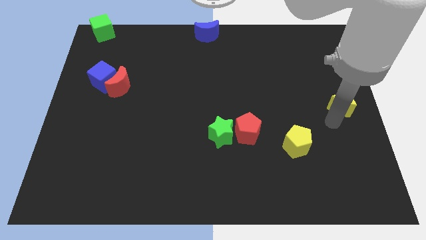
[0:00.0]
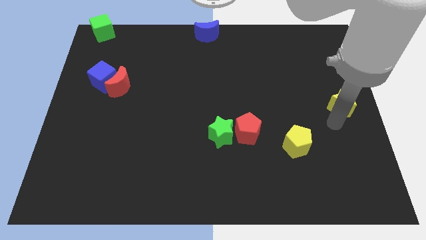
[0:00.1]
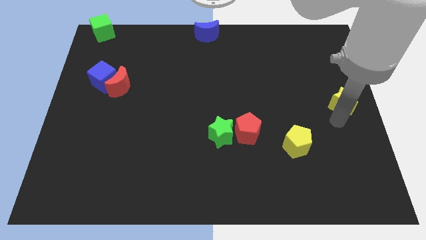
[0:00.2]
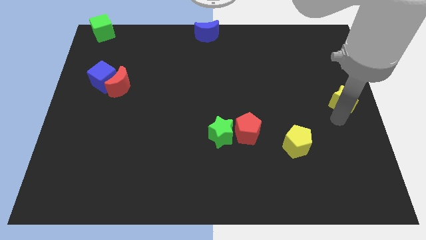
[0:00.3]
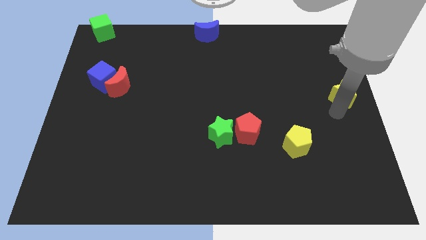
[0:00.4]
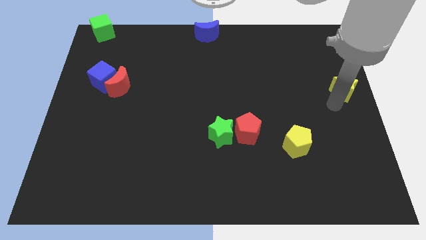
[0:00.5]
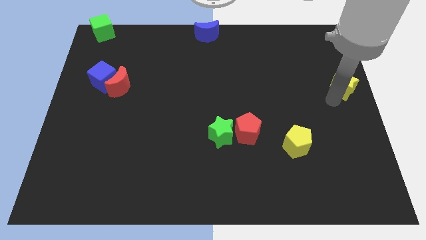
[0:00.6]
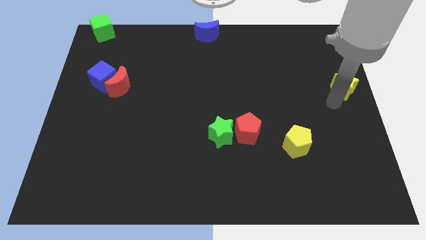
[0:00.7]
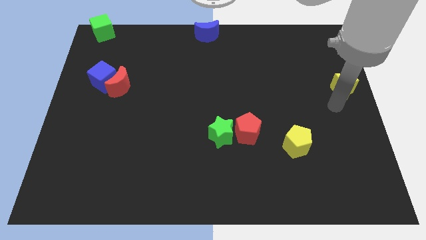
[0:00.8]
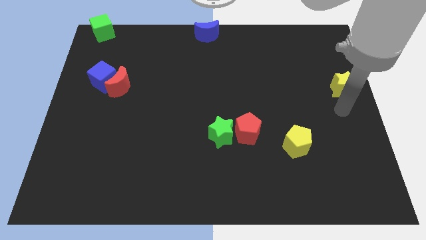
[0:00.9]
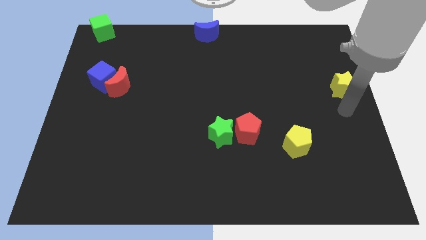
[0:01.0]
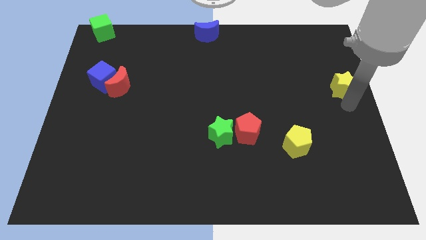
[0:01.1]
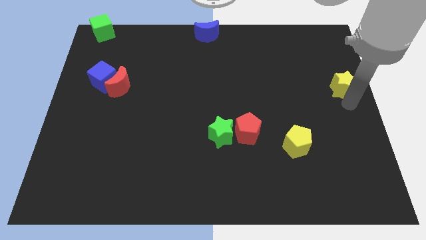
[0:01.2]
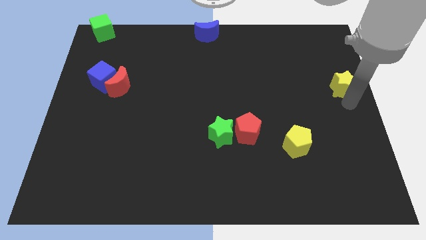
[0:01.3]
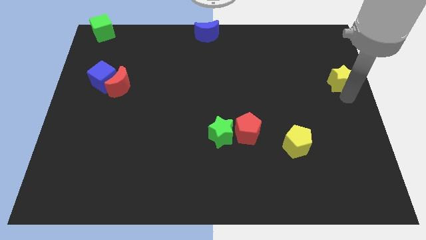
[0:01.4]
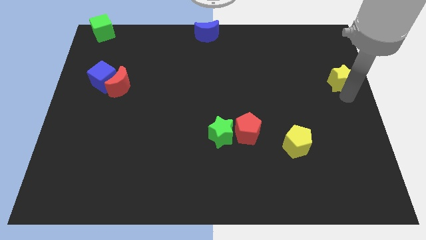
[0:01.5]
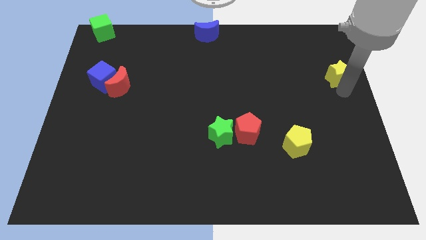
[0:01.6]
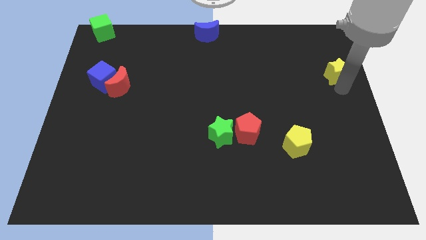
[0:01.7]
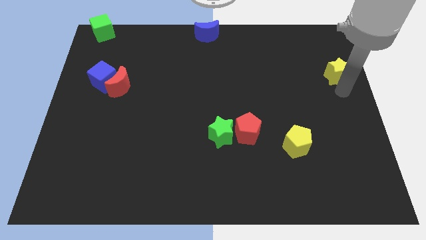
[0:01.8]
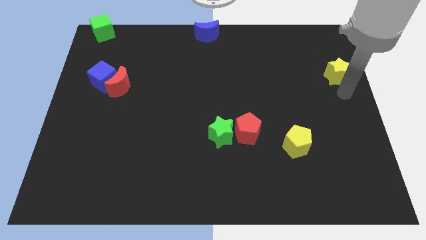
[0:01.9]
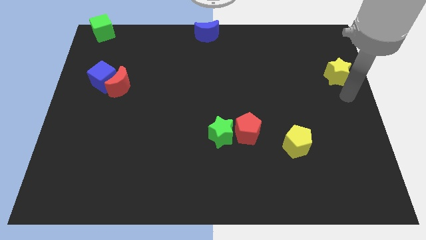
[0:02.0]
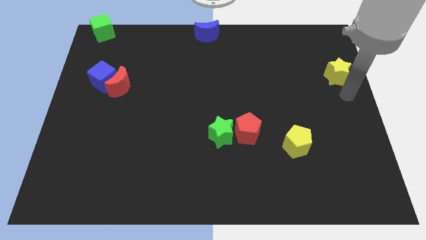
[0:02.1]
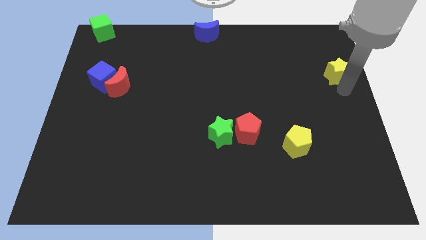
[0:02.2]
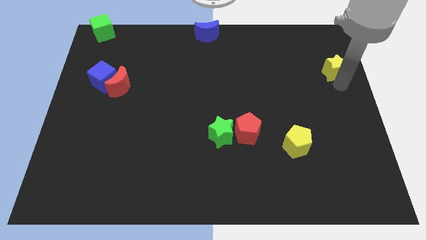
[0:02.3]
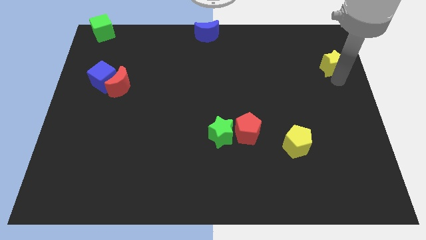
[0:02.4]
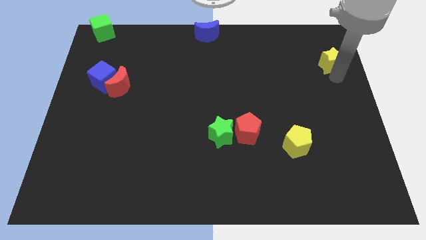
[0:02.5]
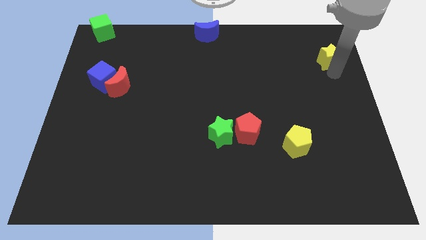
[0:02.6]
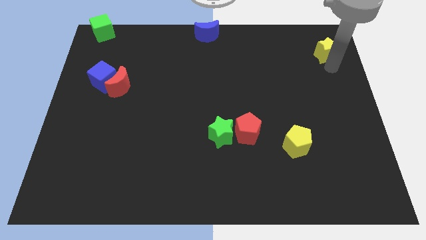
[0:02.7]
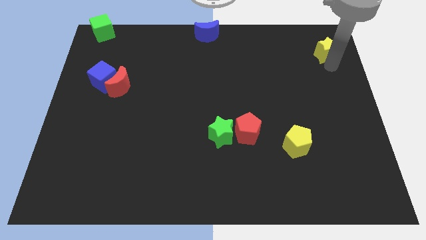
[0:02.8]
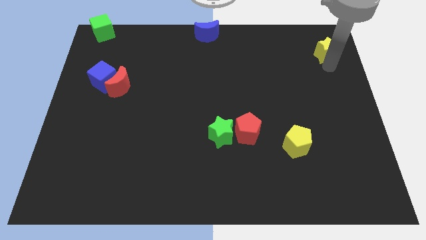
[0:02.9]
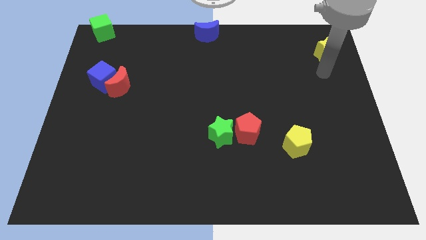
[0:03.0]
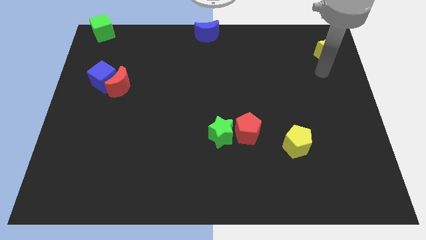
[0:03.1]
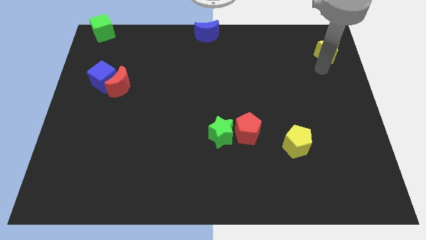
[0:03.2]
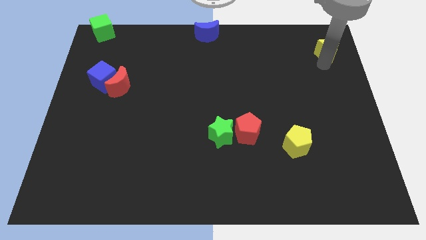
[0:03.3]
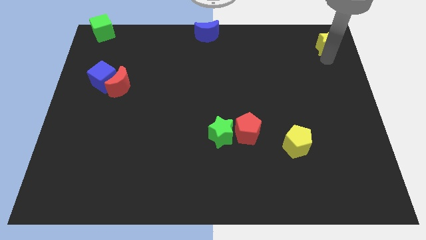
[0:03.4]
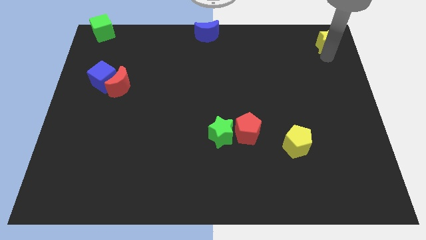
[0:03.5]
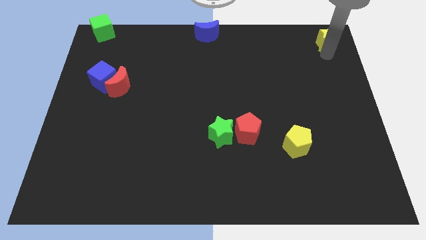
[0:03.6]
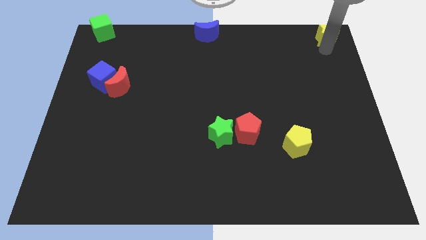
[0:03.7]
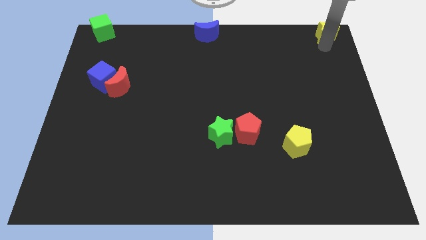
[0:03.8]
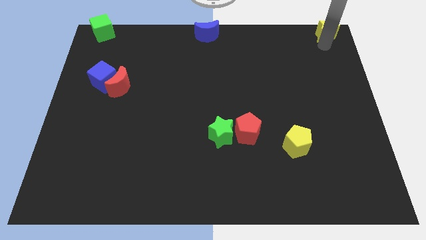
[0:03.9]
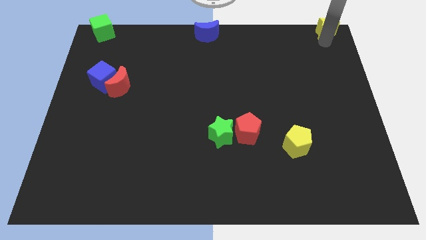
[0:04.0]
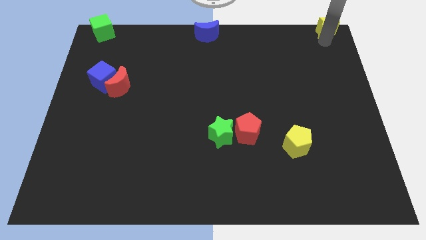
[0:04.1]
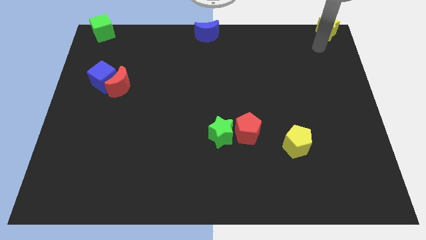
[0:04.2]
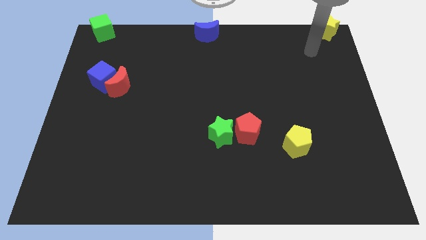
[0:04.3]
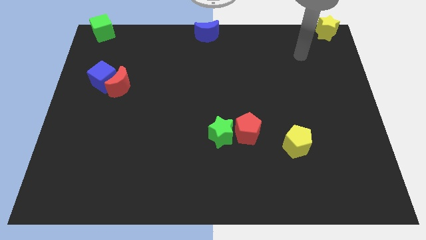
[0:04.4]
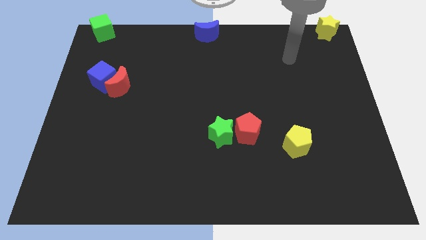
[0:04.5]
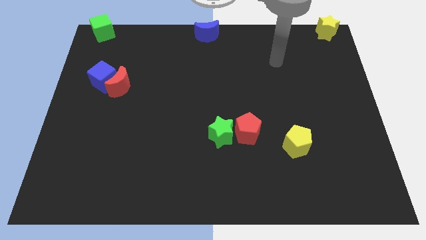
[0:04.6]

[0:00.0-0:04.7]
push the yellow star towards up

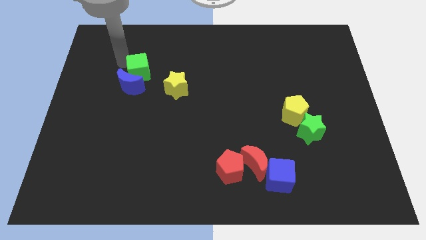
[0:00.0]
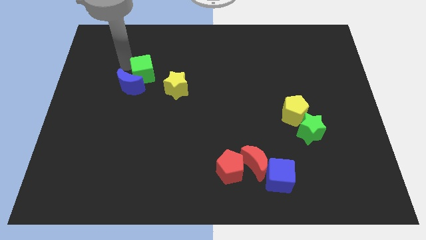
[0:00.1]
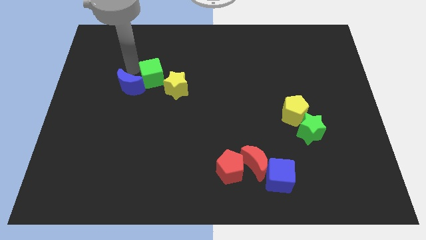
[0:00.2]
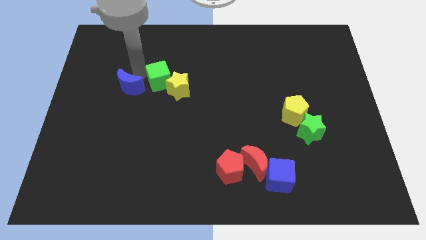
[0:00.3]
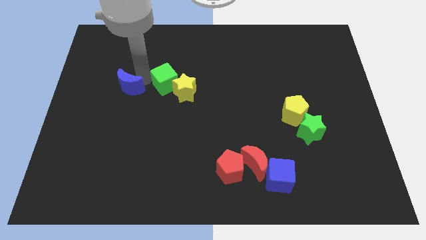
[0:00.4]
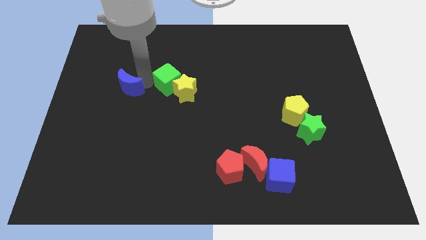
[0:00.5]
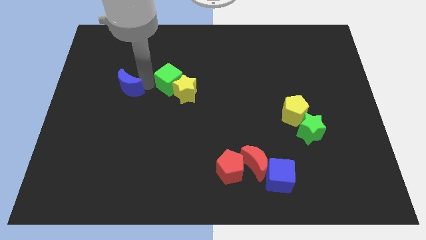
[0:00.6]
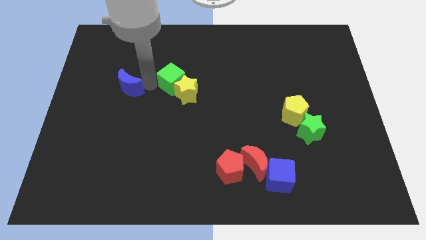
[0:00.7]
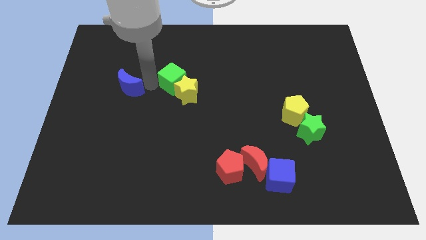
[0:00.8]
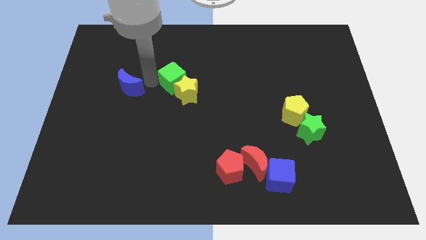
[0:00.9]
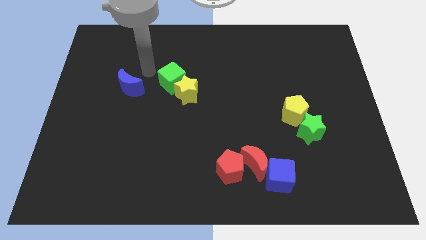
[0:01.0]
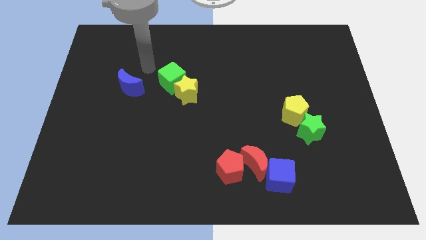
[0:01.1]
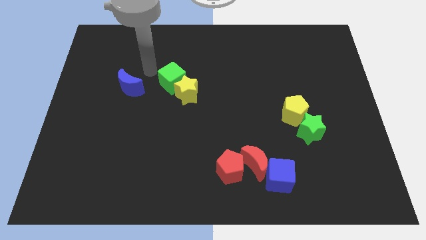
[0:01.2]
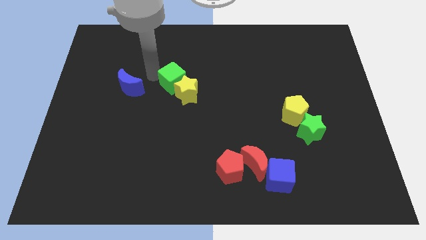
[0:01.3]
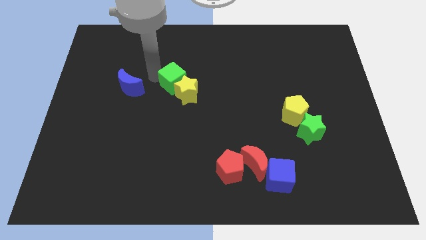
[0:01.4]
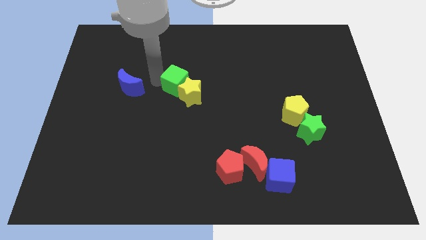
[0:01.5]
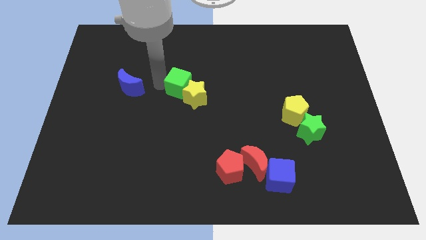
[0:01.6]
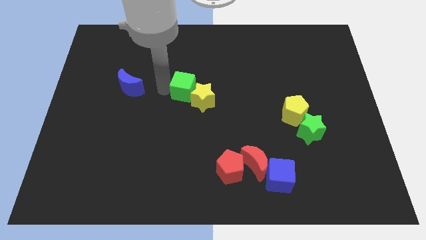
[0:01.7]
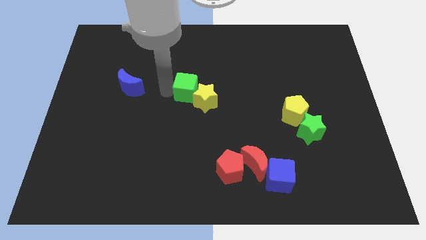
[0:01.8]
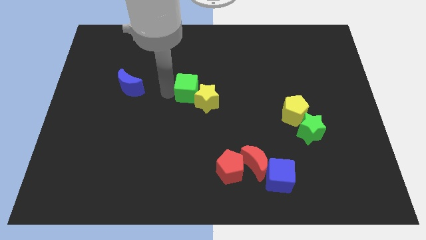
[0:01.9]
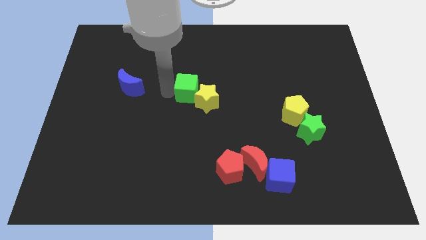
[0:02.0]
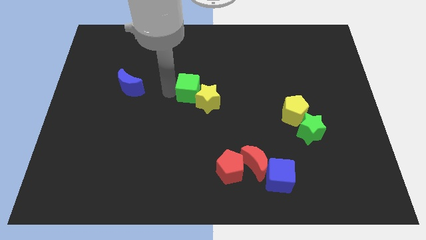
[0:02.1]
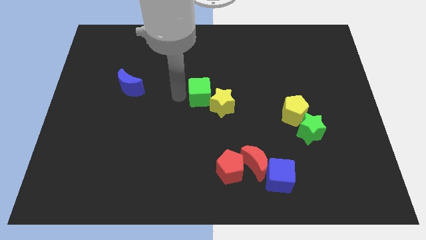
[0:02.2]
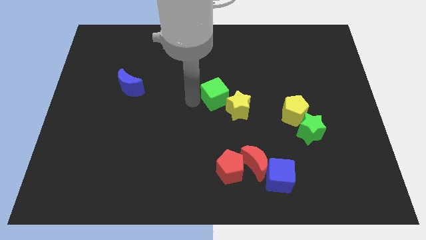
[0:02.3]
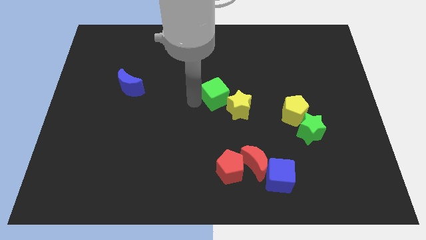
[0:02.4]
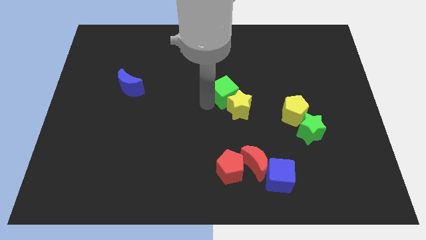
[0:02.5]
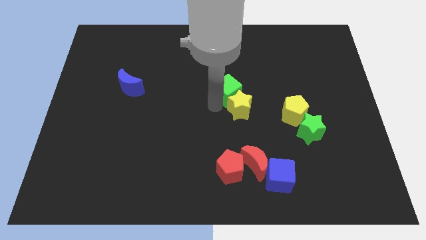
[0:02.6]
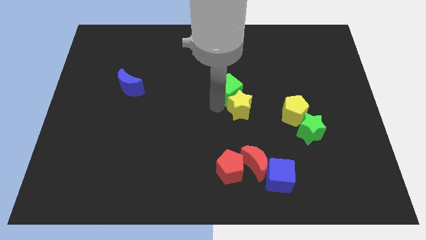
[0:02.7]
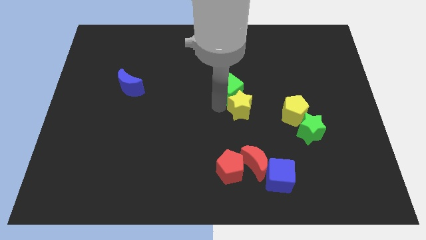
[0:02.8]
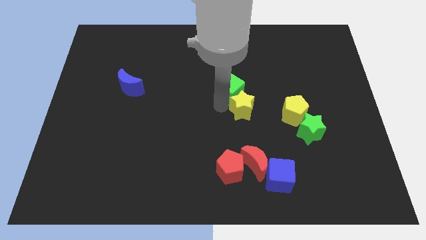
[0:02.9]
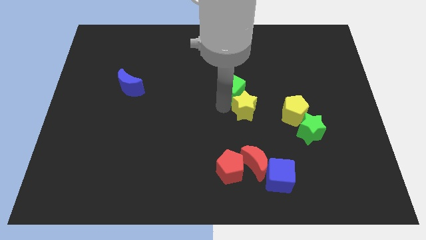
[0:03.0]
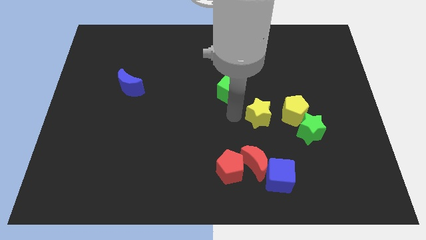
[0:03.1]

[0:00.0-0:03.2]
push the yellow star and green cube towards the yellow pentagon

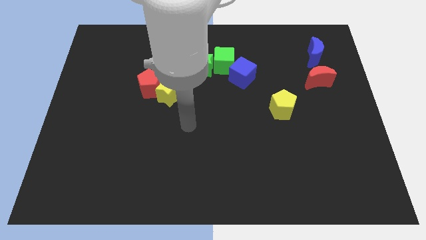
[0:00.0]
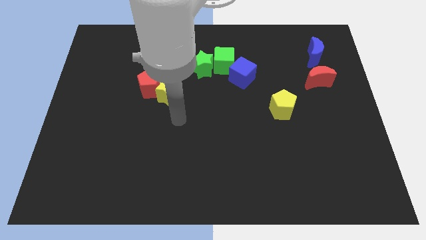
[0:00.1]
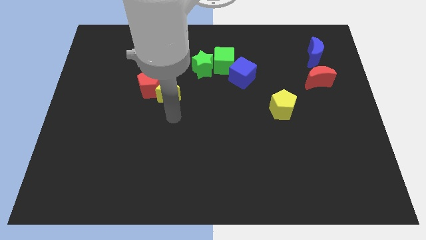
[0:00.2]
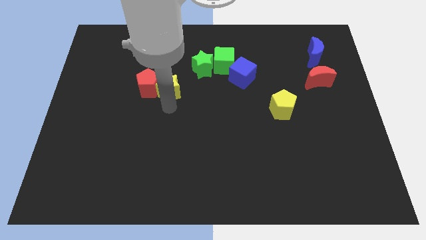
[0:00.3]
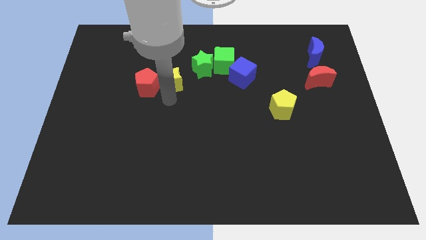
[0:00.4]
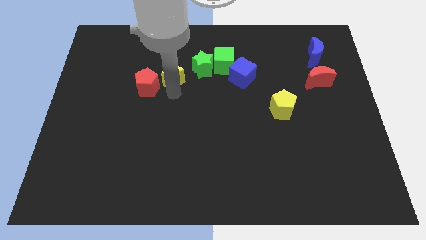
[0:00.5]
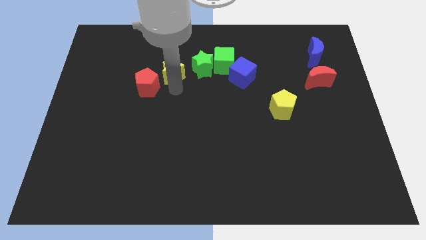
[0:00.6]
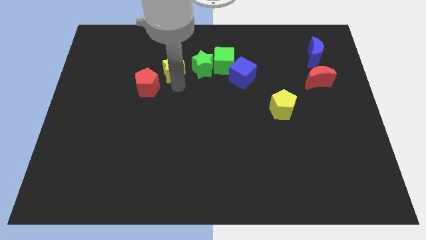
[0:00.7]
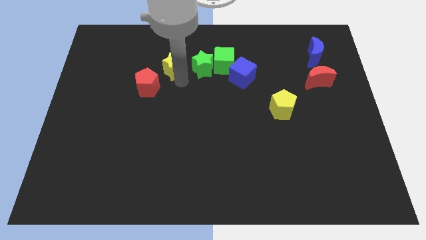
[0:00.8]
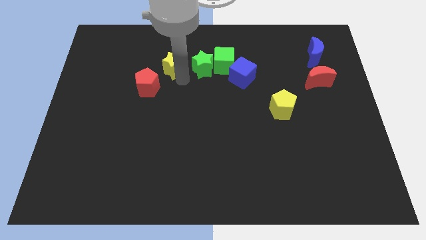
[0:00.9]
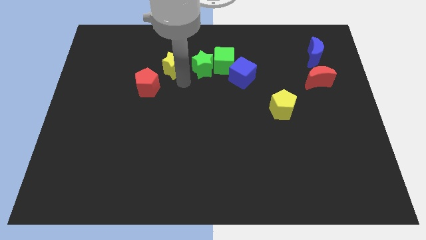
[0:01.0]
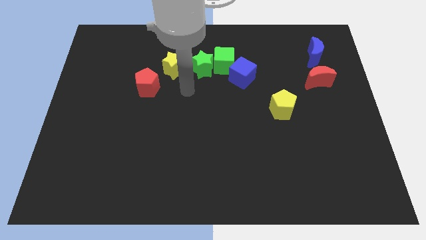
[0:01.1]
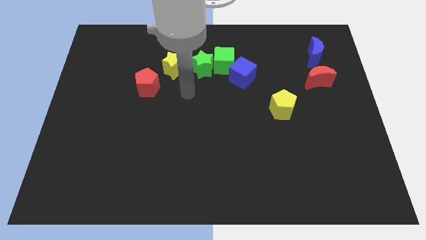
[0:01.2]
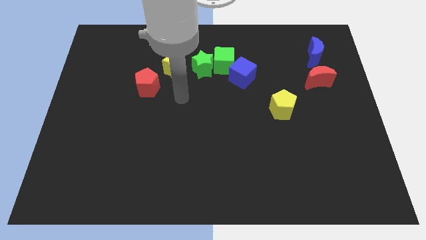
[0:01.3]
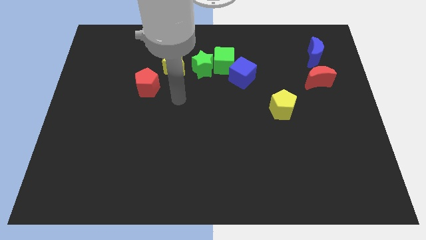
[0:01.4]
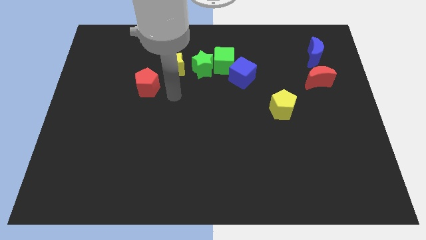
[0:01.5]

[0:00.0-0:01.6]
separate red pentagon and yellow star
